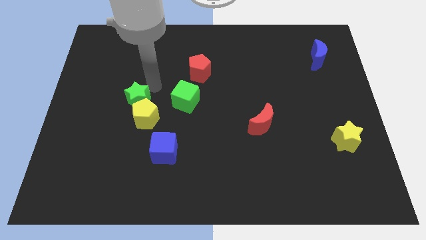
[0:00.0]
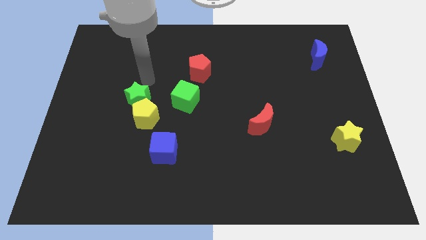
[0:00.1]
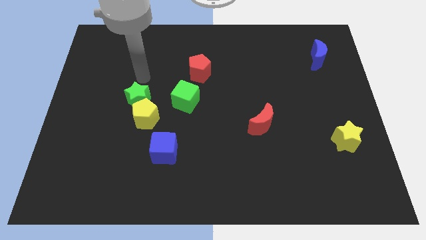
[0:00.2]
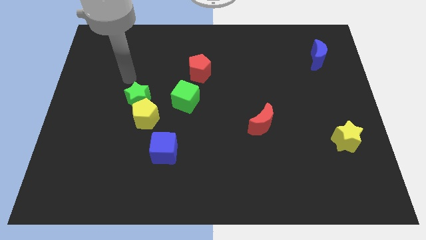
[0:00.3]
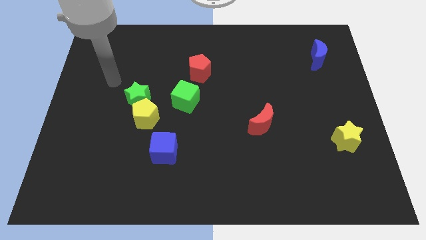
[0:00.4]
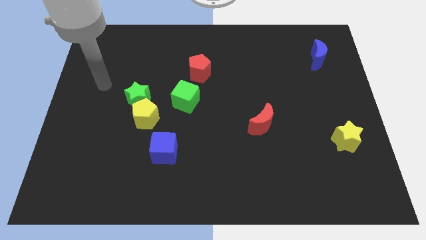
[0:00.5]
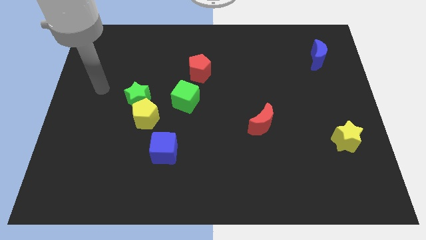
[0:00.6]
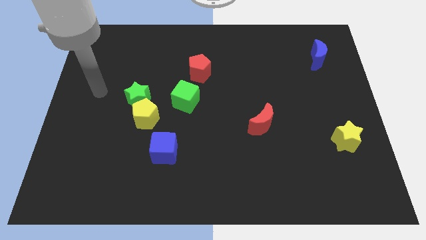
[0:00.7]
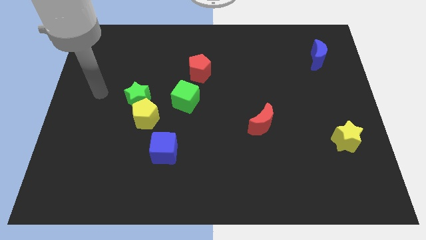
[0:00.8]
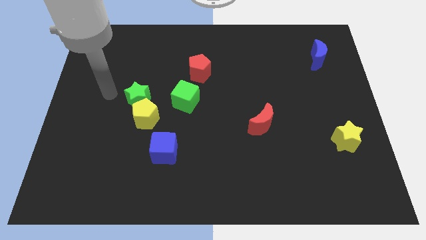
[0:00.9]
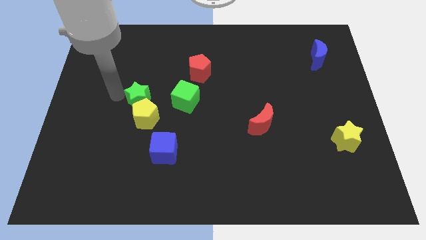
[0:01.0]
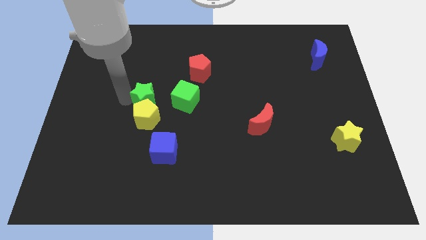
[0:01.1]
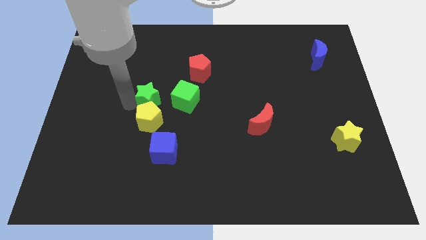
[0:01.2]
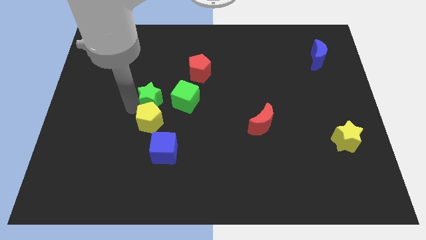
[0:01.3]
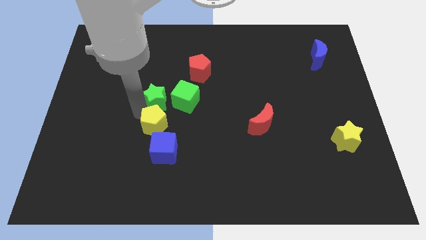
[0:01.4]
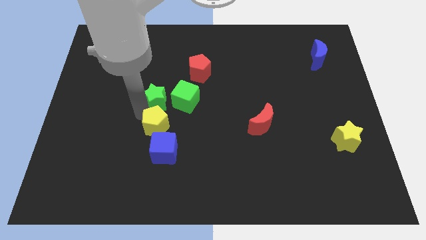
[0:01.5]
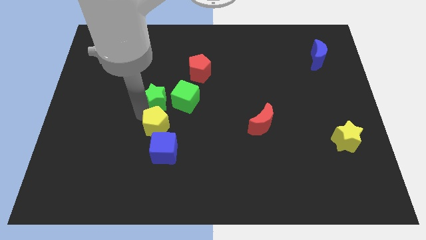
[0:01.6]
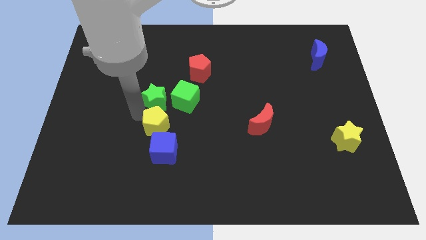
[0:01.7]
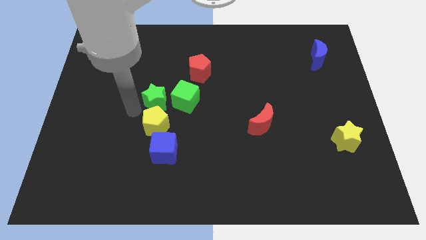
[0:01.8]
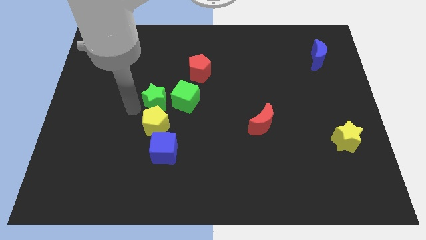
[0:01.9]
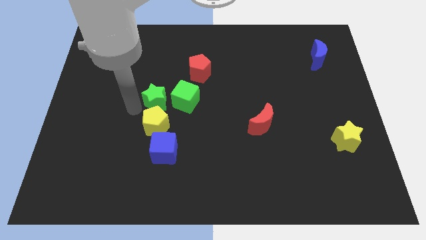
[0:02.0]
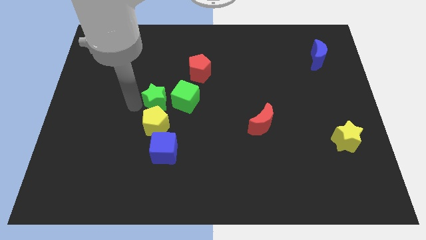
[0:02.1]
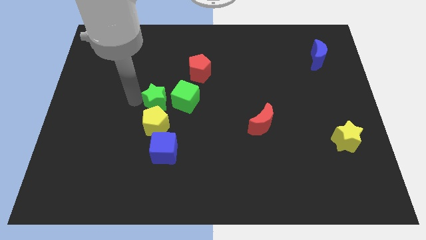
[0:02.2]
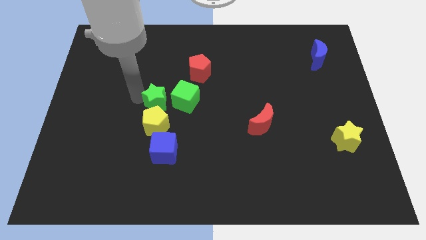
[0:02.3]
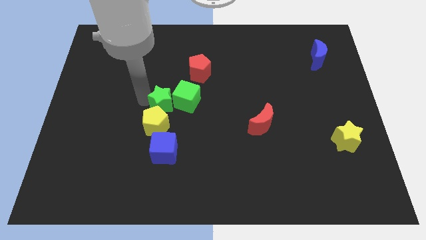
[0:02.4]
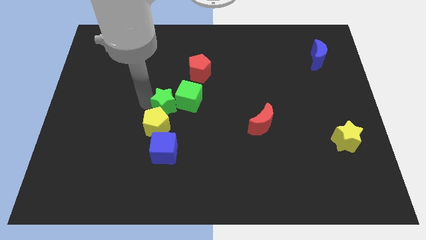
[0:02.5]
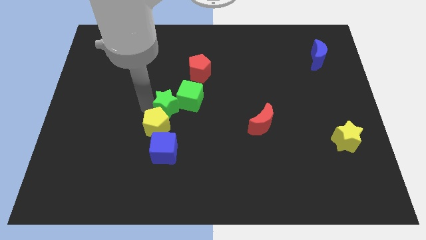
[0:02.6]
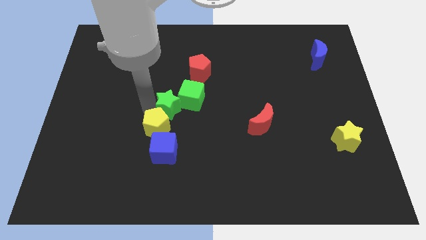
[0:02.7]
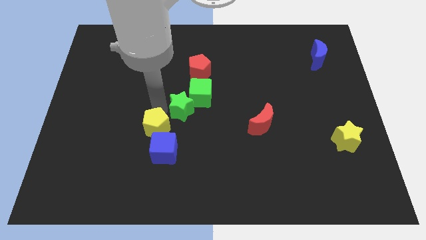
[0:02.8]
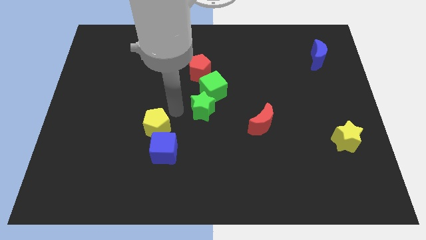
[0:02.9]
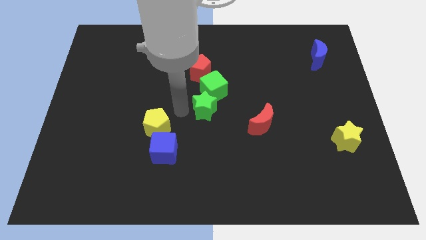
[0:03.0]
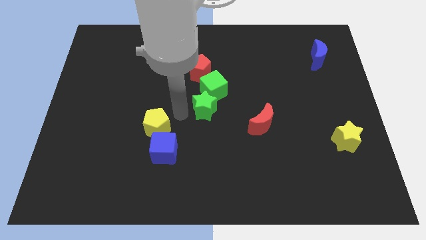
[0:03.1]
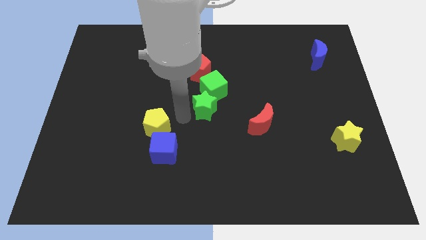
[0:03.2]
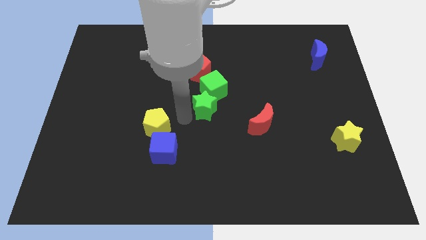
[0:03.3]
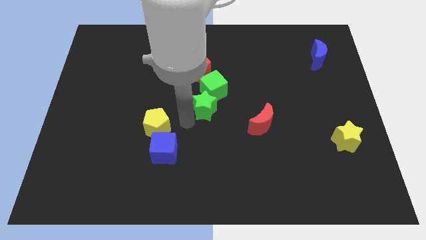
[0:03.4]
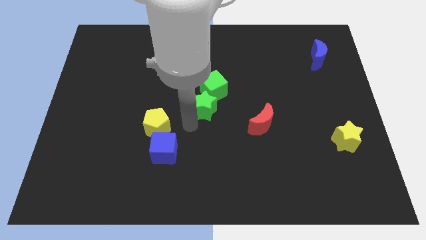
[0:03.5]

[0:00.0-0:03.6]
push the green cube and green star to the bottom of the red pentagon

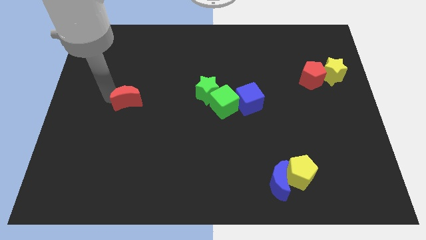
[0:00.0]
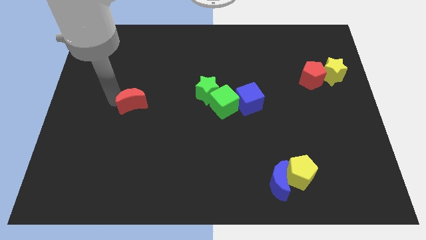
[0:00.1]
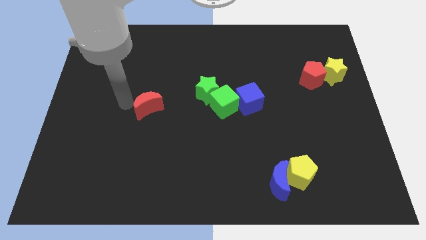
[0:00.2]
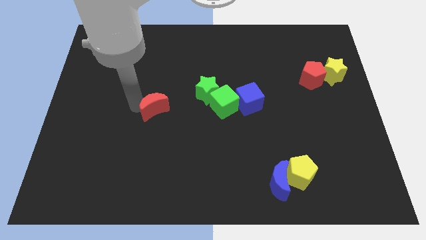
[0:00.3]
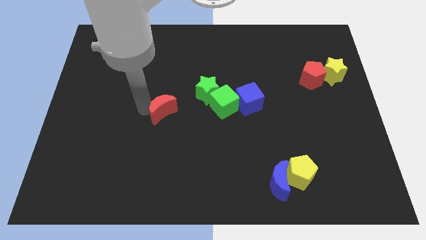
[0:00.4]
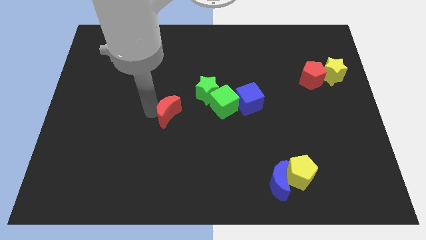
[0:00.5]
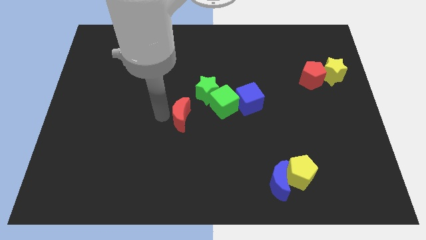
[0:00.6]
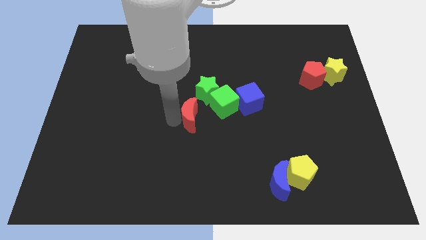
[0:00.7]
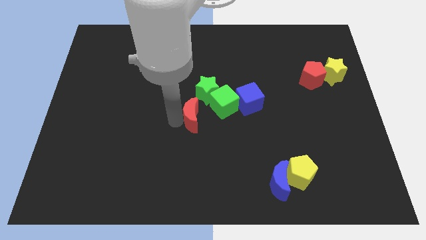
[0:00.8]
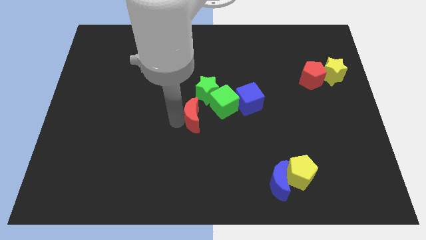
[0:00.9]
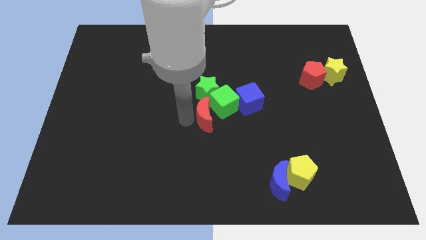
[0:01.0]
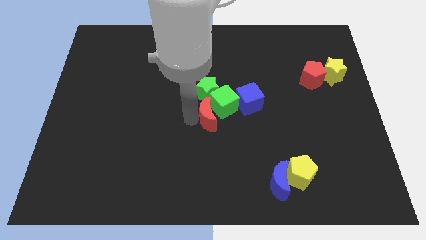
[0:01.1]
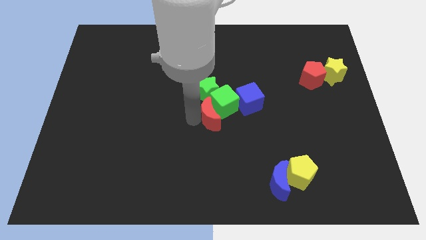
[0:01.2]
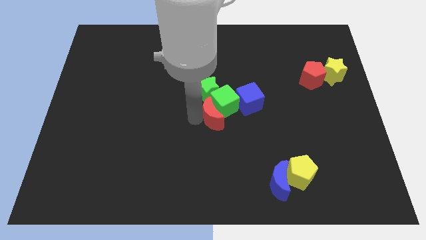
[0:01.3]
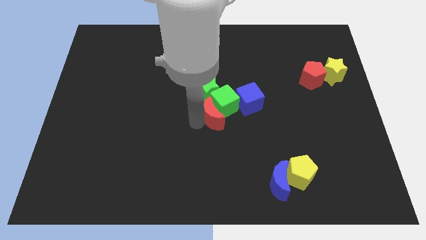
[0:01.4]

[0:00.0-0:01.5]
move the red crescent towards the green cube

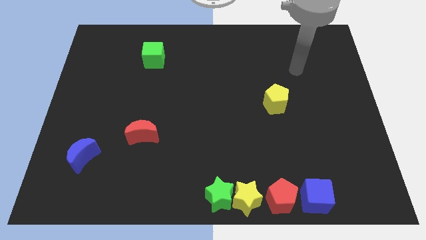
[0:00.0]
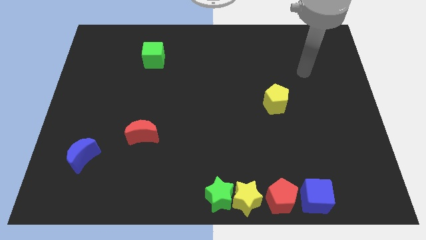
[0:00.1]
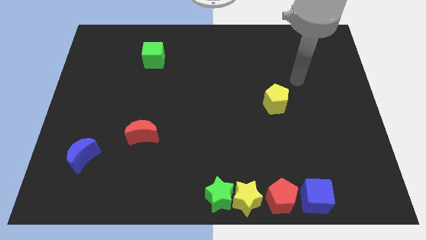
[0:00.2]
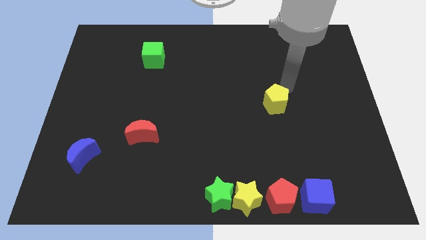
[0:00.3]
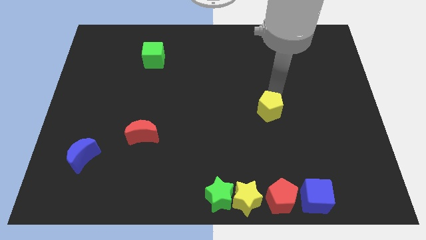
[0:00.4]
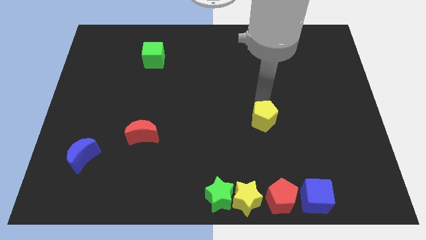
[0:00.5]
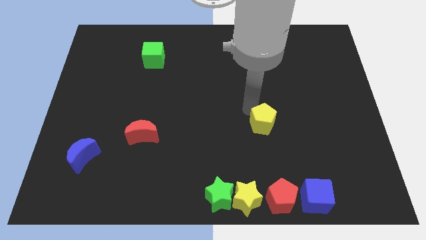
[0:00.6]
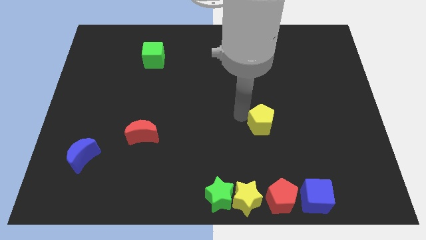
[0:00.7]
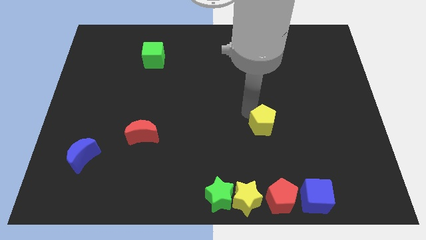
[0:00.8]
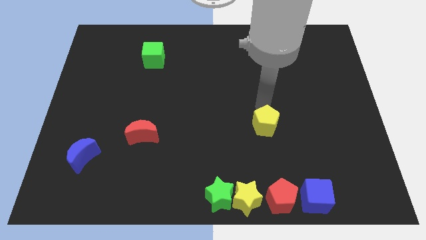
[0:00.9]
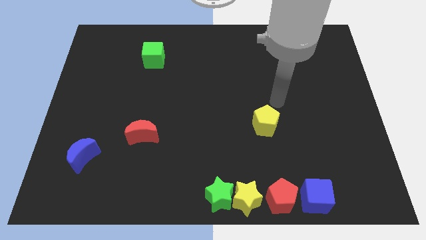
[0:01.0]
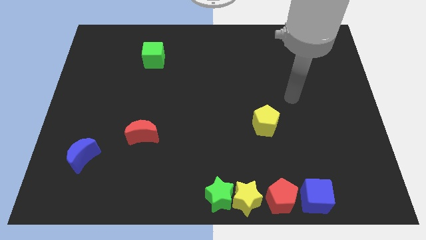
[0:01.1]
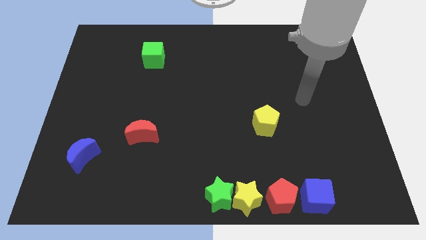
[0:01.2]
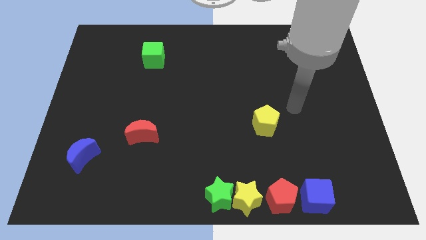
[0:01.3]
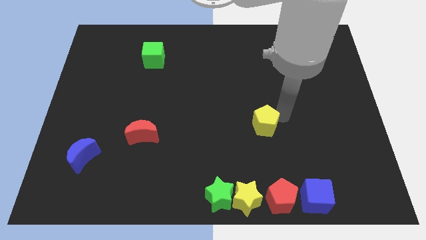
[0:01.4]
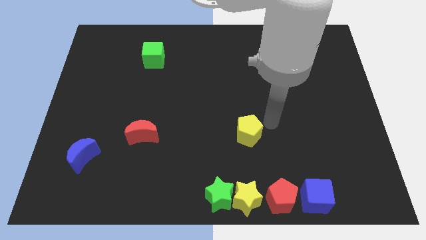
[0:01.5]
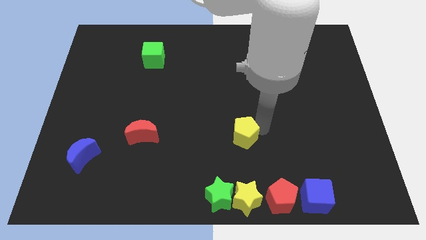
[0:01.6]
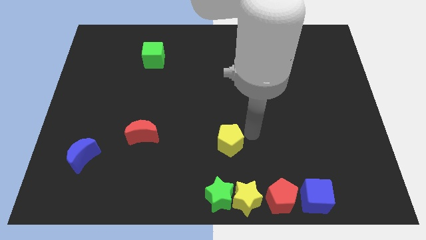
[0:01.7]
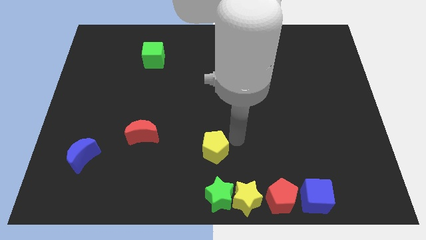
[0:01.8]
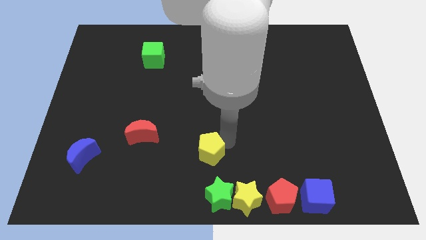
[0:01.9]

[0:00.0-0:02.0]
put the yellow pentagon above the green star

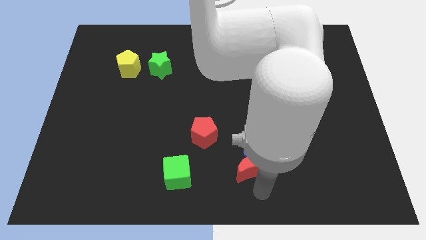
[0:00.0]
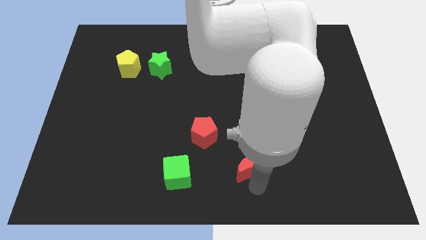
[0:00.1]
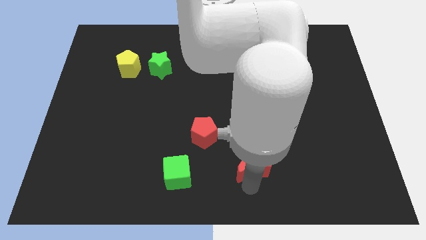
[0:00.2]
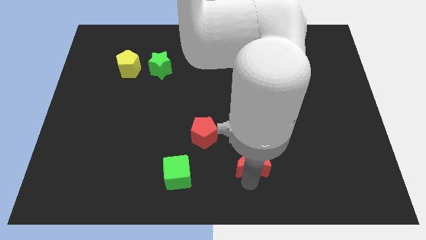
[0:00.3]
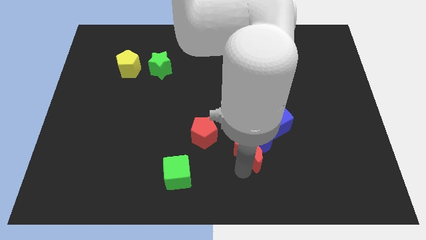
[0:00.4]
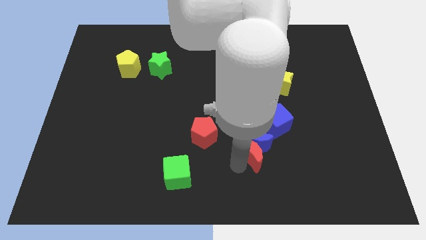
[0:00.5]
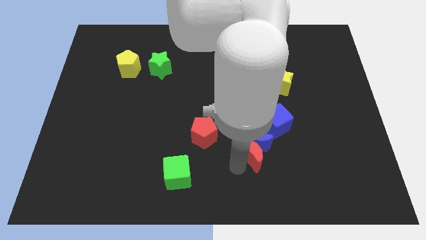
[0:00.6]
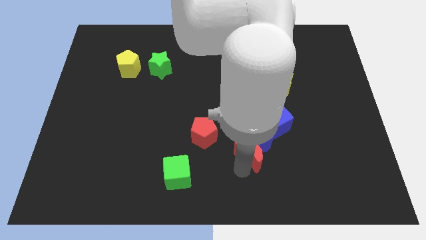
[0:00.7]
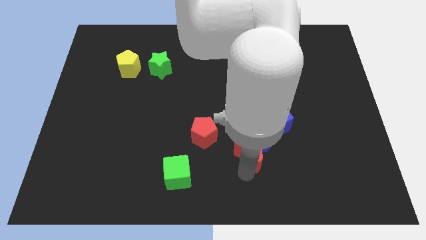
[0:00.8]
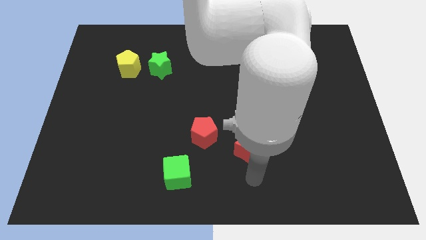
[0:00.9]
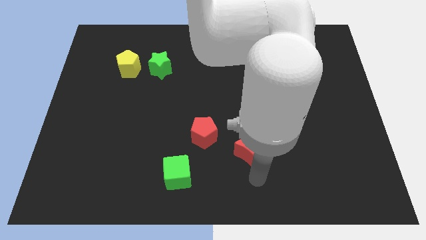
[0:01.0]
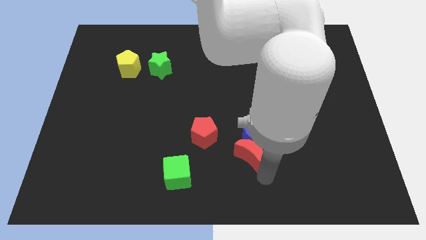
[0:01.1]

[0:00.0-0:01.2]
move the red crescent towards the blue crescent

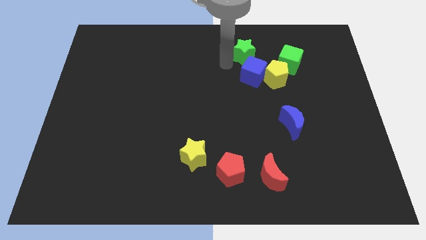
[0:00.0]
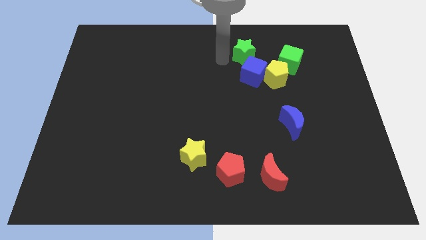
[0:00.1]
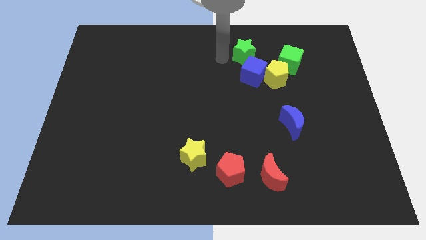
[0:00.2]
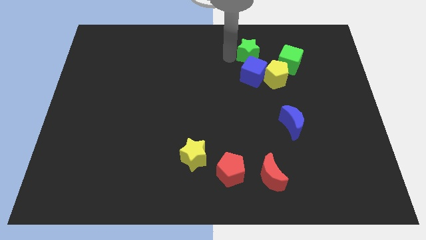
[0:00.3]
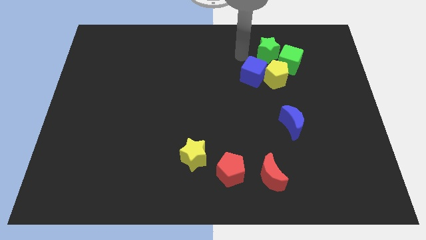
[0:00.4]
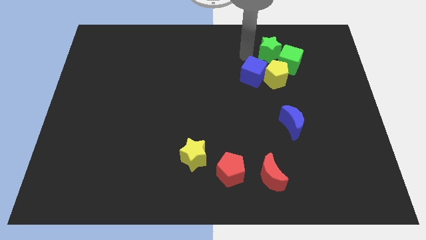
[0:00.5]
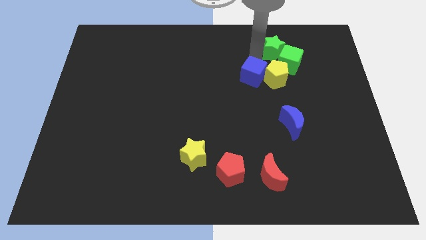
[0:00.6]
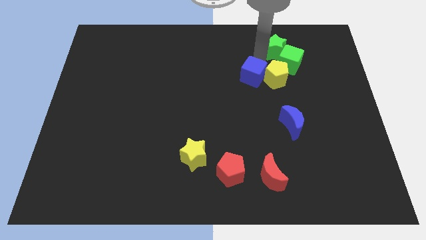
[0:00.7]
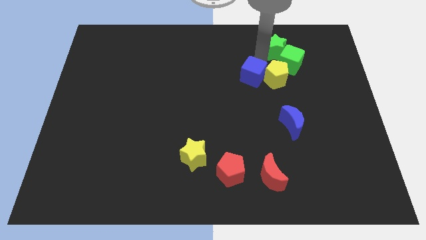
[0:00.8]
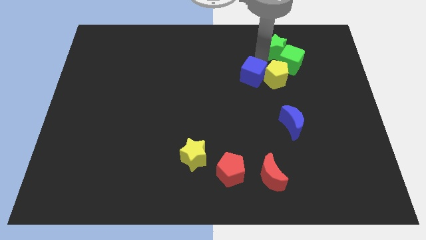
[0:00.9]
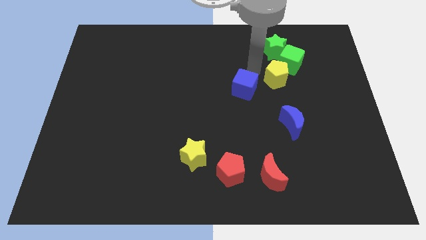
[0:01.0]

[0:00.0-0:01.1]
separate blue cube and green star
